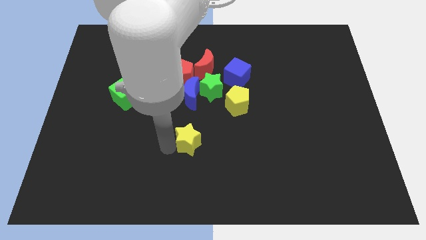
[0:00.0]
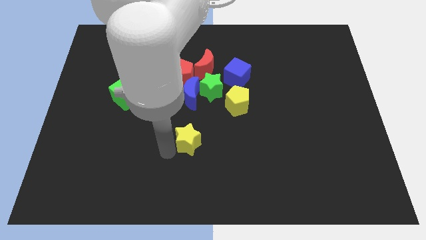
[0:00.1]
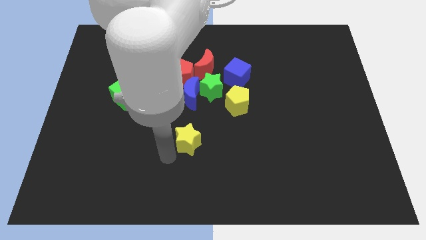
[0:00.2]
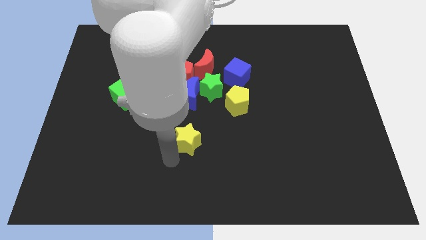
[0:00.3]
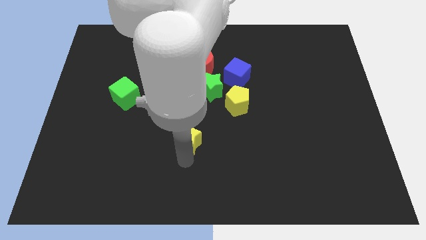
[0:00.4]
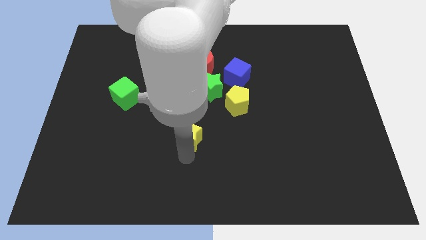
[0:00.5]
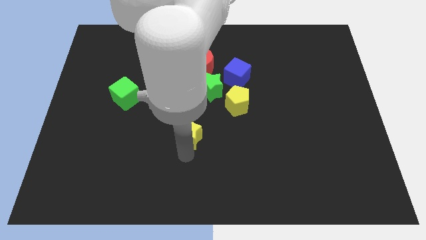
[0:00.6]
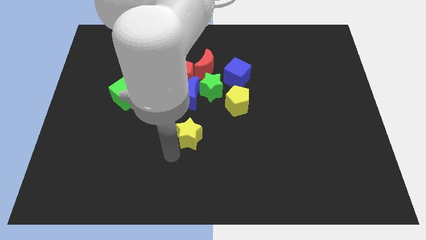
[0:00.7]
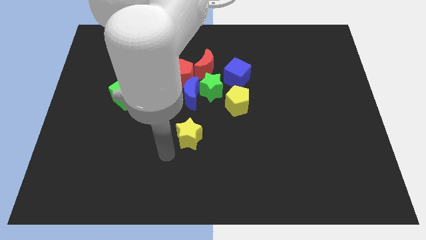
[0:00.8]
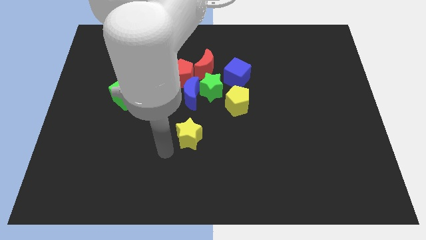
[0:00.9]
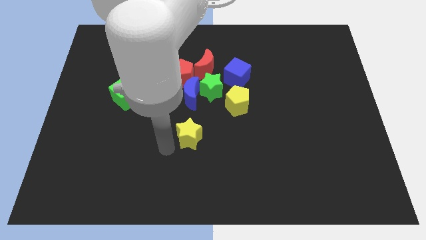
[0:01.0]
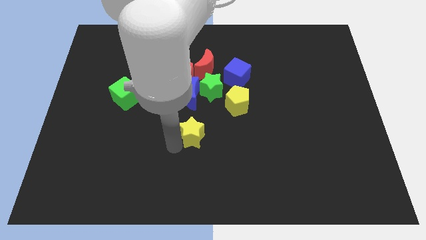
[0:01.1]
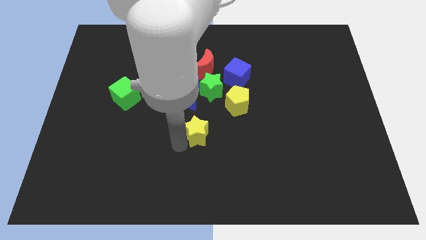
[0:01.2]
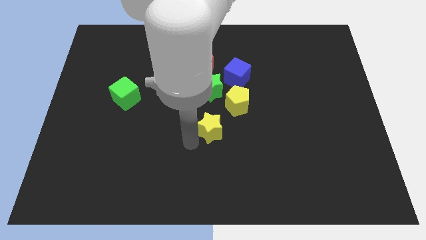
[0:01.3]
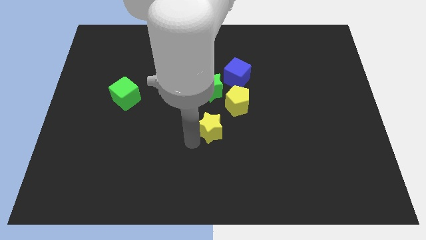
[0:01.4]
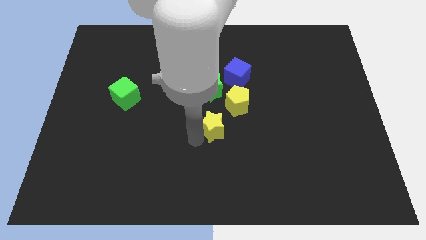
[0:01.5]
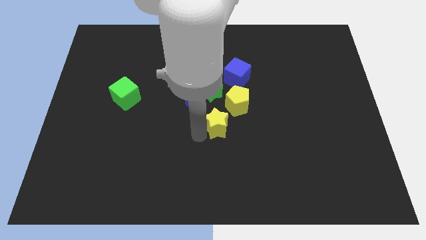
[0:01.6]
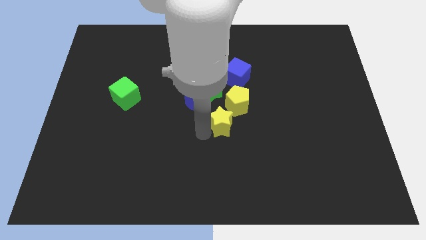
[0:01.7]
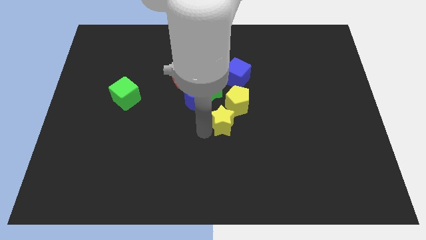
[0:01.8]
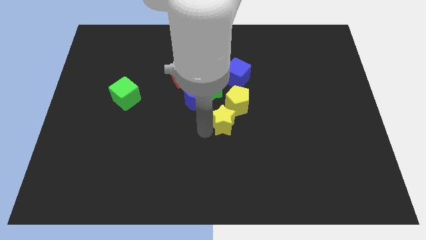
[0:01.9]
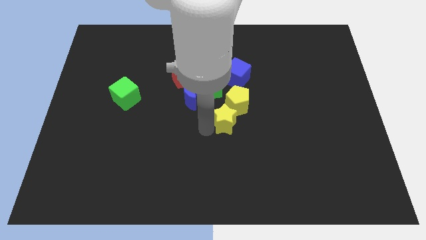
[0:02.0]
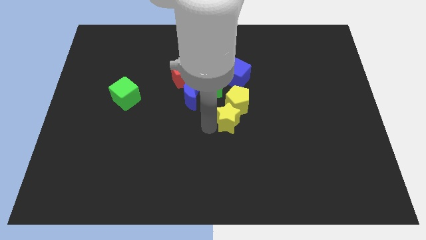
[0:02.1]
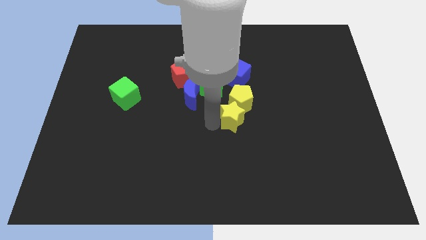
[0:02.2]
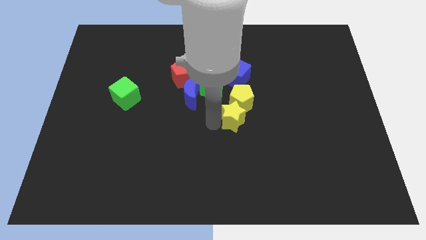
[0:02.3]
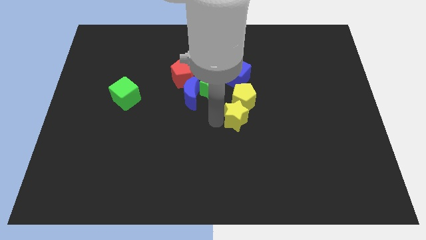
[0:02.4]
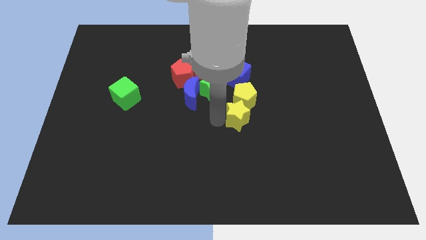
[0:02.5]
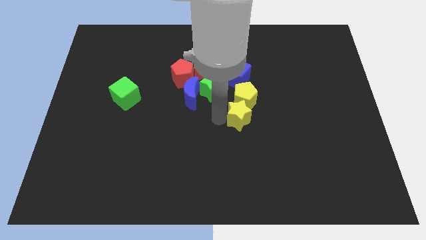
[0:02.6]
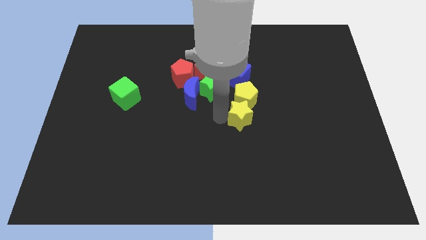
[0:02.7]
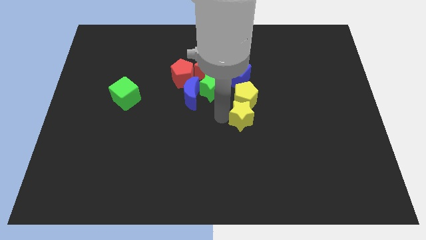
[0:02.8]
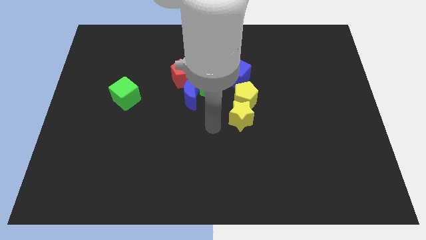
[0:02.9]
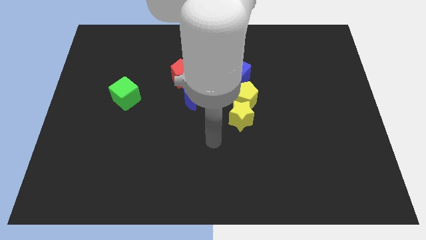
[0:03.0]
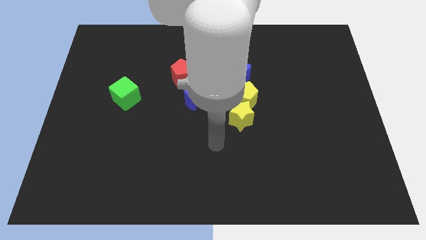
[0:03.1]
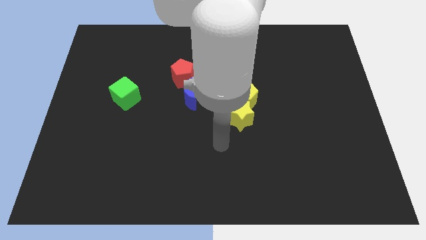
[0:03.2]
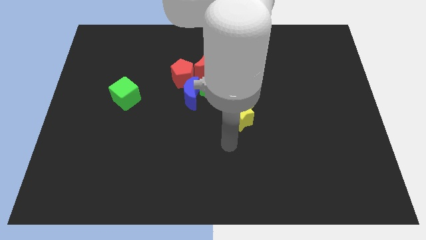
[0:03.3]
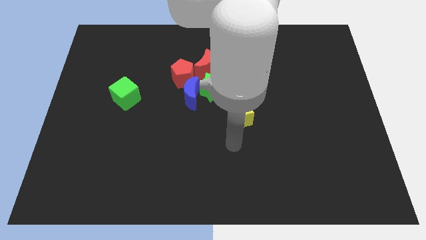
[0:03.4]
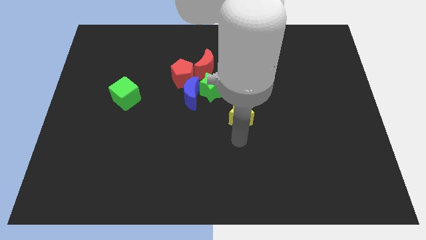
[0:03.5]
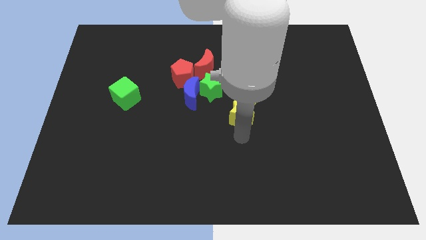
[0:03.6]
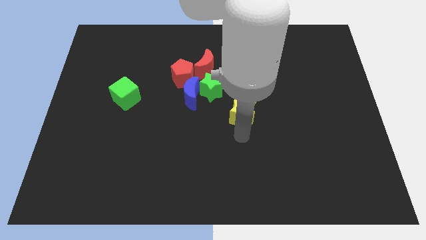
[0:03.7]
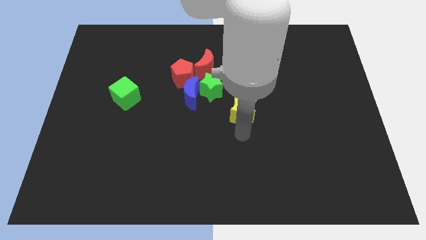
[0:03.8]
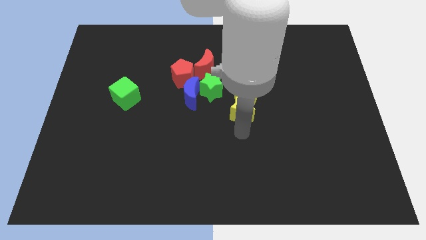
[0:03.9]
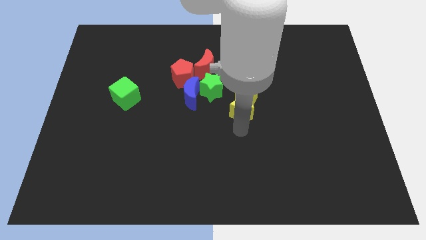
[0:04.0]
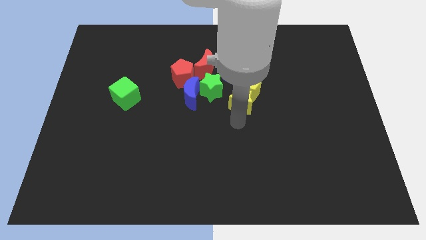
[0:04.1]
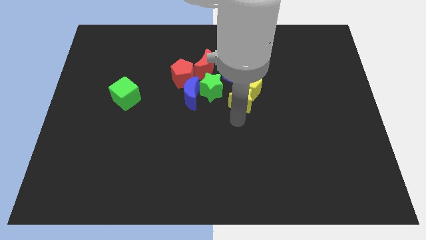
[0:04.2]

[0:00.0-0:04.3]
push the yellow star to the yellow pentagon

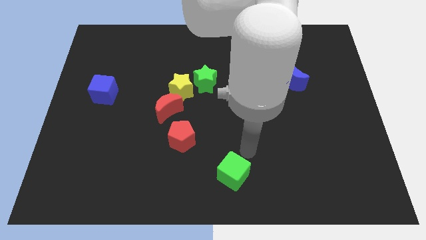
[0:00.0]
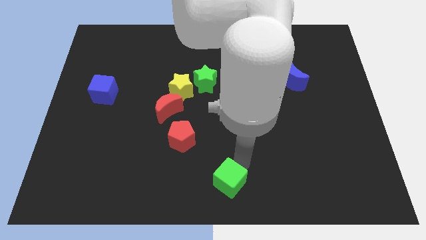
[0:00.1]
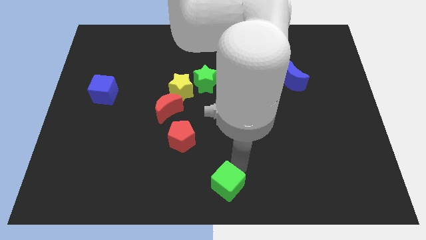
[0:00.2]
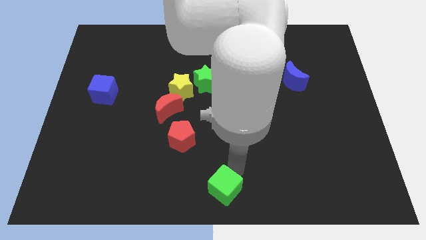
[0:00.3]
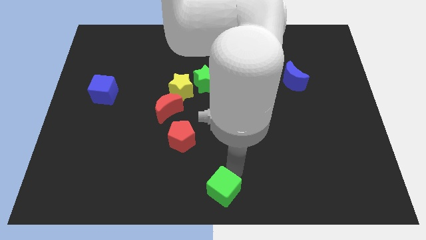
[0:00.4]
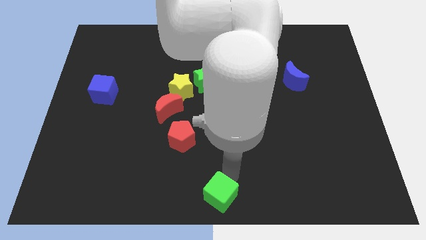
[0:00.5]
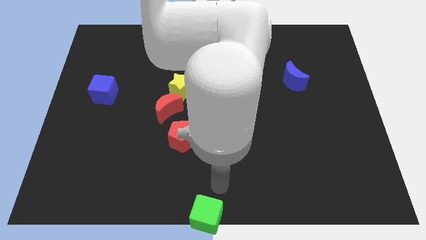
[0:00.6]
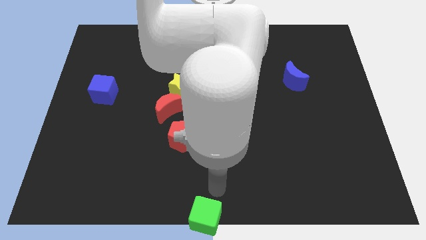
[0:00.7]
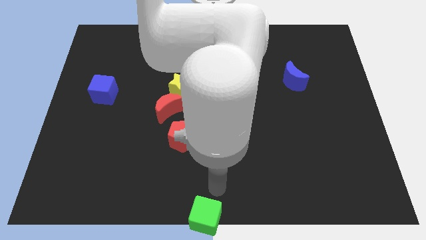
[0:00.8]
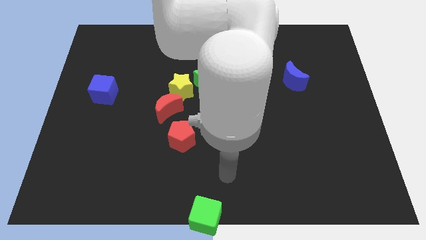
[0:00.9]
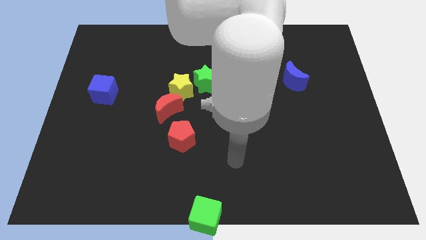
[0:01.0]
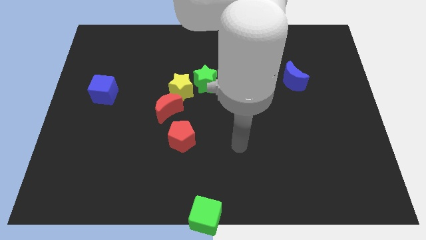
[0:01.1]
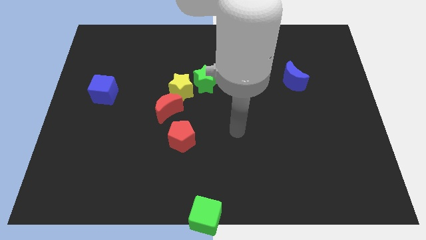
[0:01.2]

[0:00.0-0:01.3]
place the green cube at the bottom center of the board

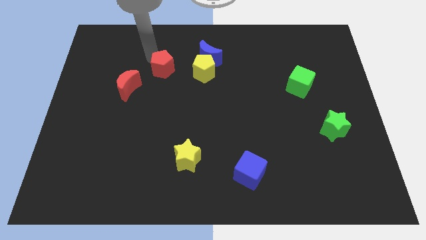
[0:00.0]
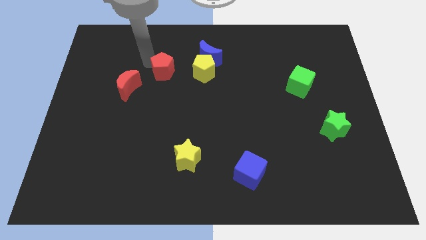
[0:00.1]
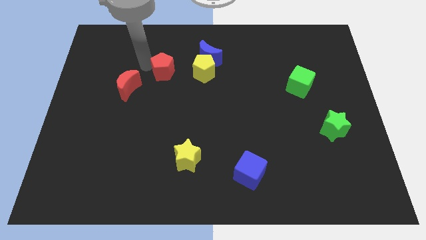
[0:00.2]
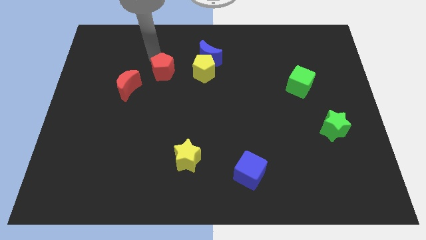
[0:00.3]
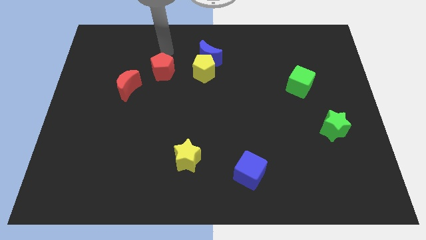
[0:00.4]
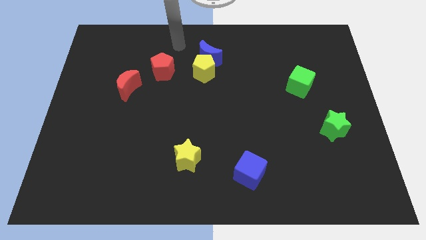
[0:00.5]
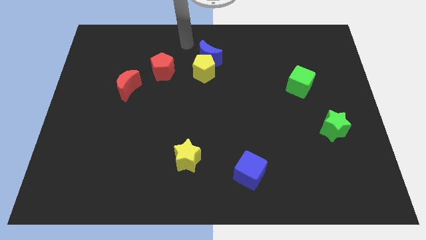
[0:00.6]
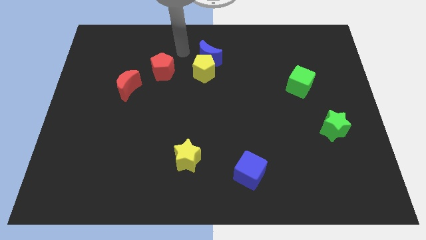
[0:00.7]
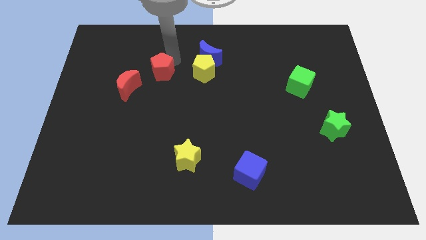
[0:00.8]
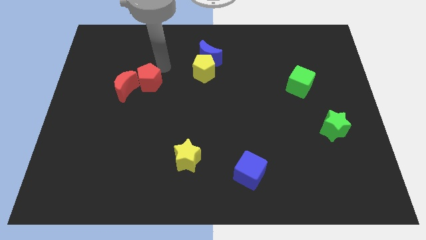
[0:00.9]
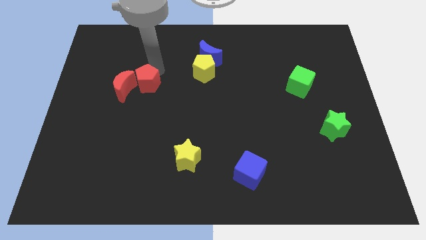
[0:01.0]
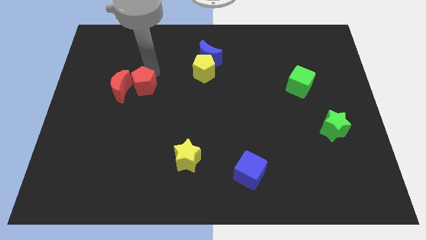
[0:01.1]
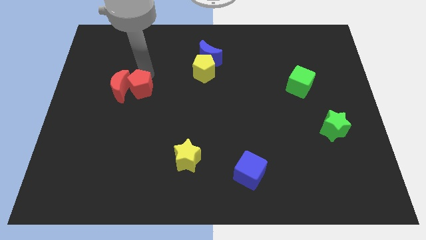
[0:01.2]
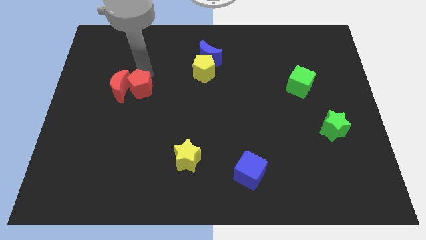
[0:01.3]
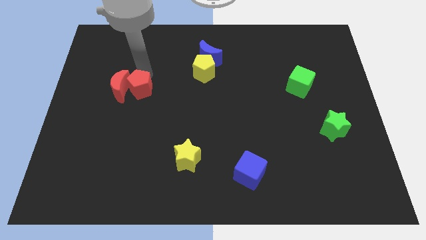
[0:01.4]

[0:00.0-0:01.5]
move the red pentagon into the red crescent

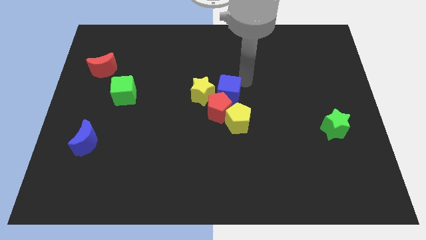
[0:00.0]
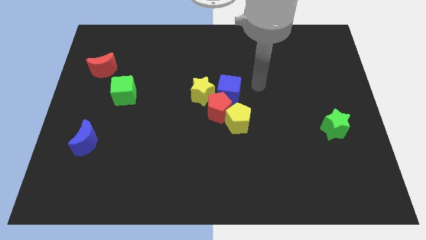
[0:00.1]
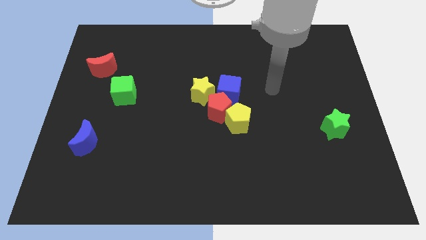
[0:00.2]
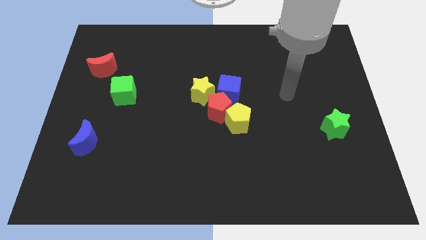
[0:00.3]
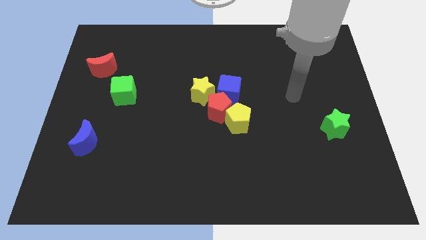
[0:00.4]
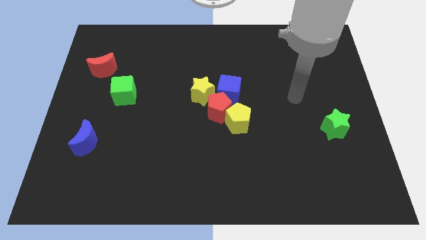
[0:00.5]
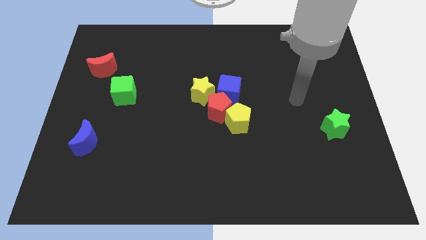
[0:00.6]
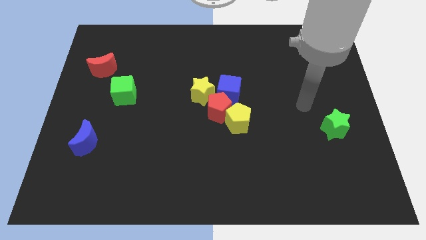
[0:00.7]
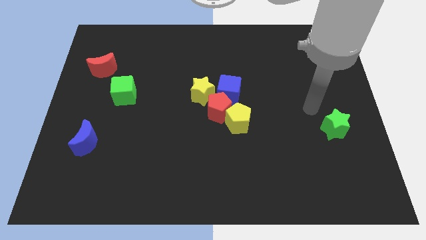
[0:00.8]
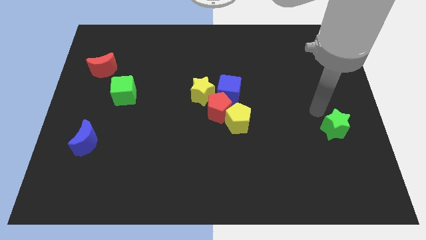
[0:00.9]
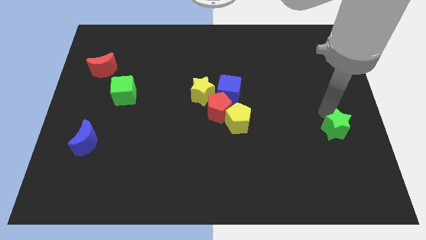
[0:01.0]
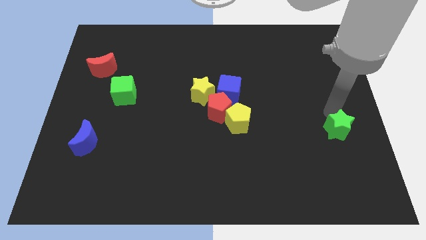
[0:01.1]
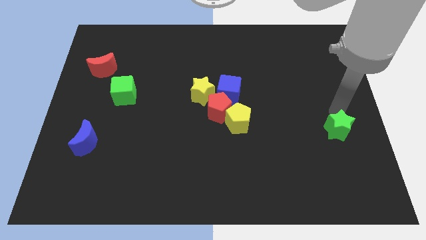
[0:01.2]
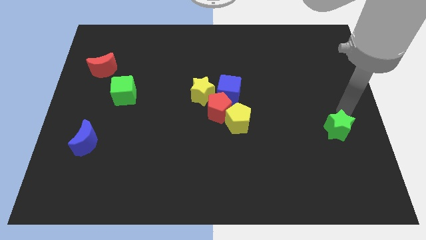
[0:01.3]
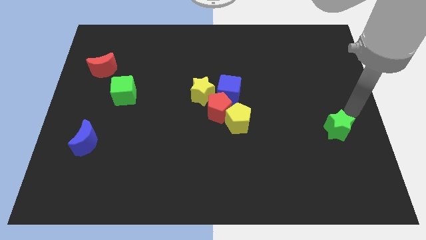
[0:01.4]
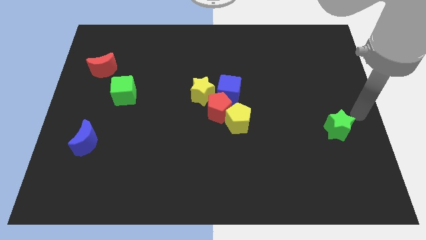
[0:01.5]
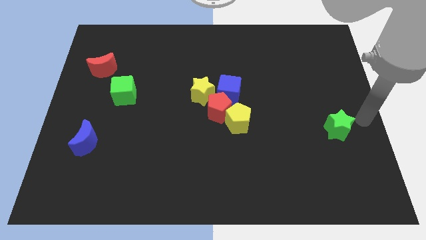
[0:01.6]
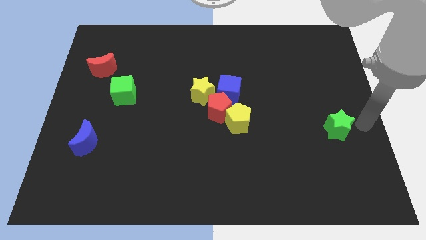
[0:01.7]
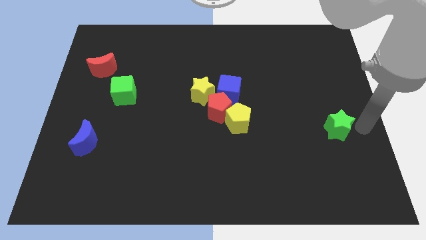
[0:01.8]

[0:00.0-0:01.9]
move your arm right to the green star
